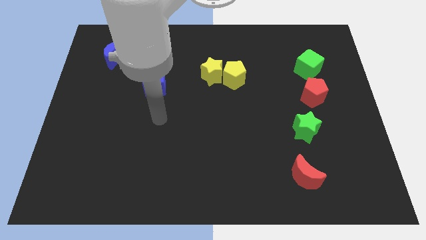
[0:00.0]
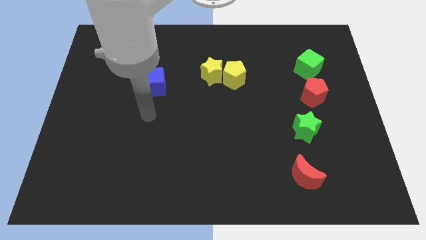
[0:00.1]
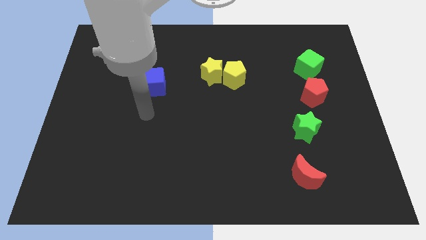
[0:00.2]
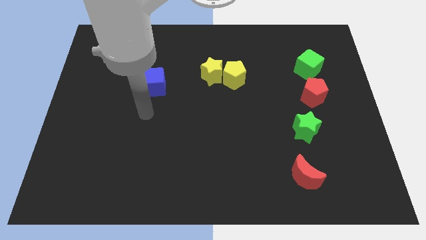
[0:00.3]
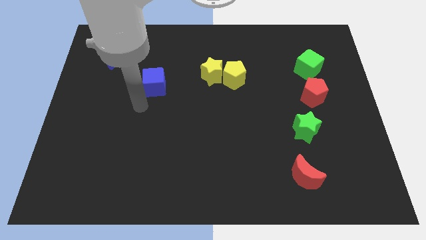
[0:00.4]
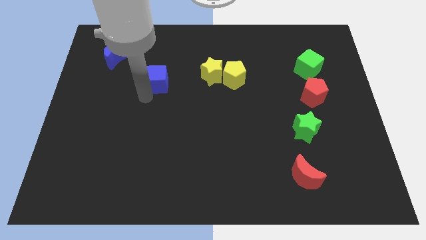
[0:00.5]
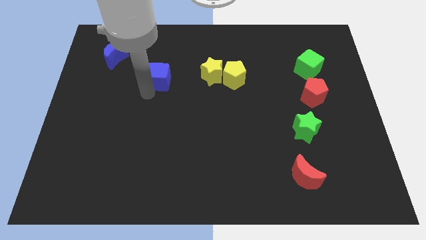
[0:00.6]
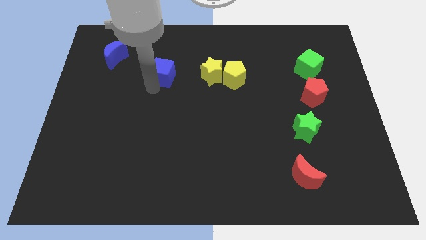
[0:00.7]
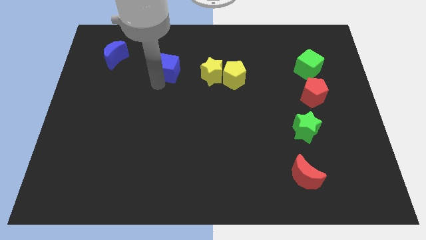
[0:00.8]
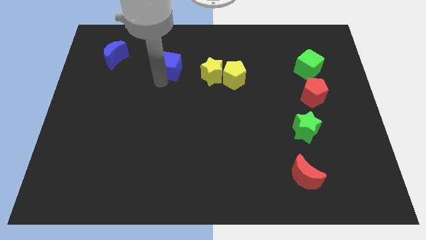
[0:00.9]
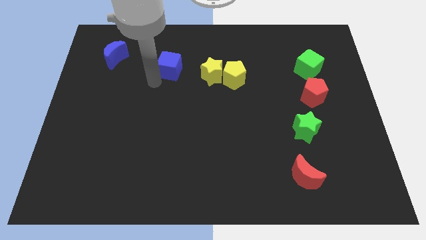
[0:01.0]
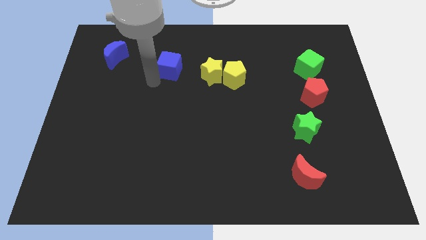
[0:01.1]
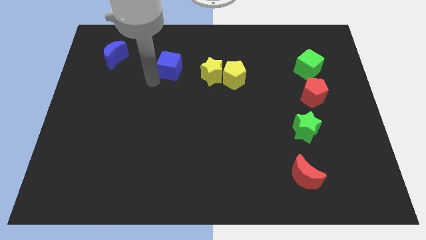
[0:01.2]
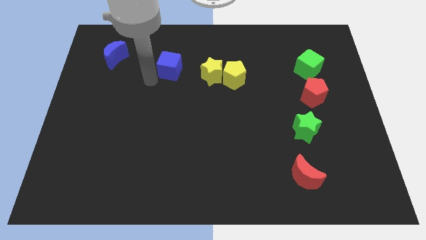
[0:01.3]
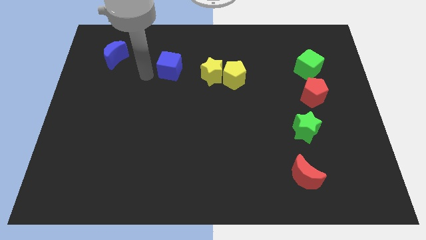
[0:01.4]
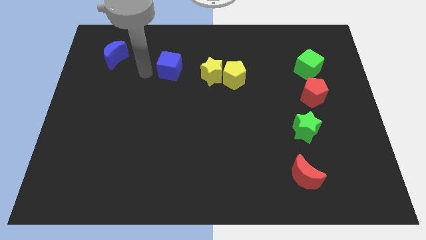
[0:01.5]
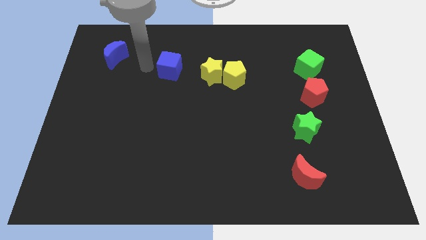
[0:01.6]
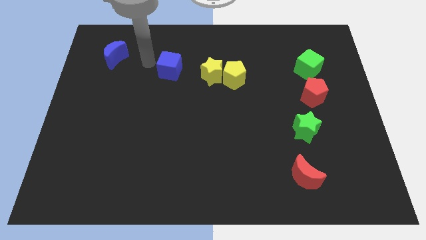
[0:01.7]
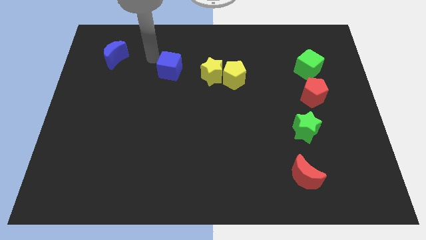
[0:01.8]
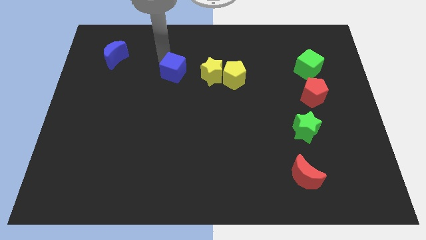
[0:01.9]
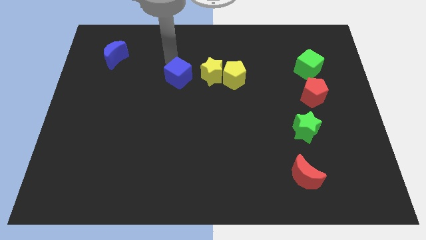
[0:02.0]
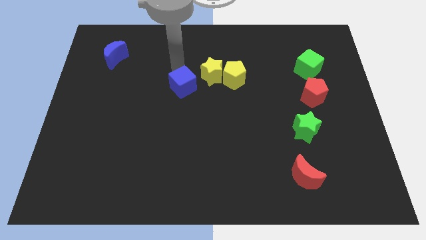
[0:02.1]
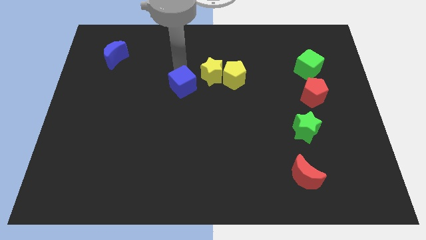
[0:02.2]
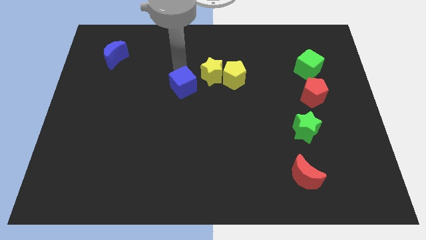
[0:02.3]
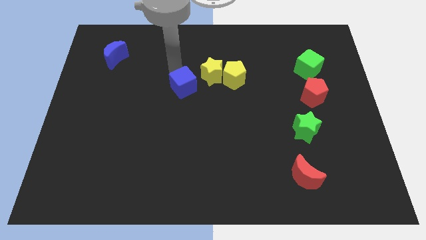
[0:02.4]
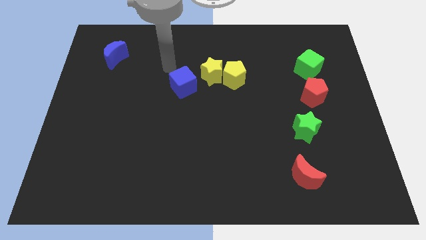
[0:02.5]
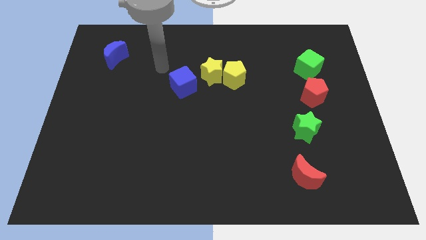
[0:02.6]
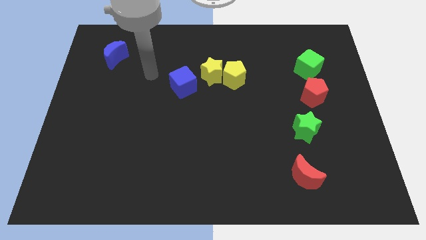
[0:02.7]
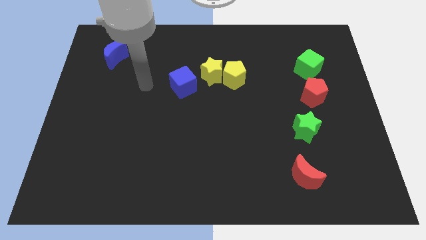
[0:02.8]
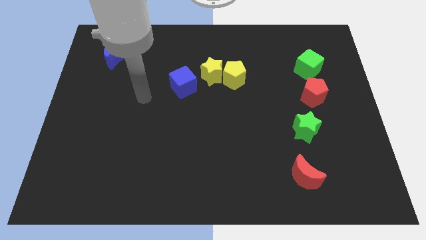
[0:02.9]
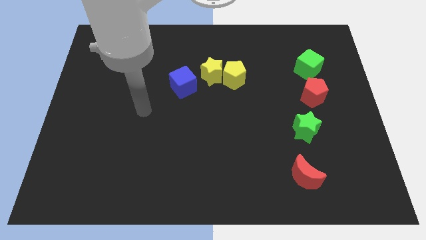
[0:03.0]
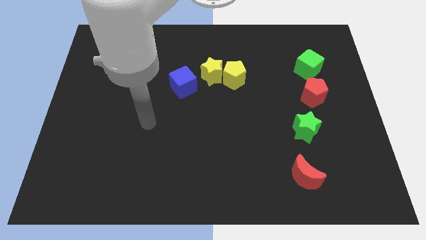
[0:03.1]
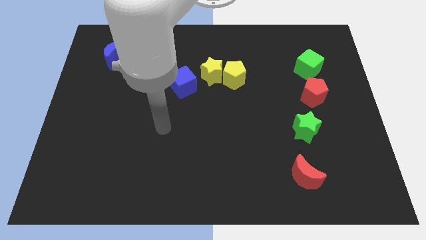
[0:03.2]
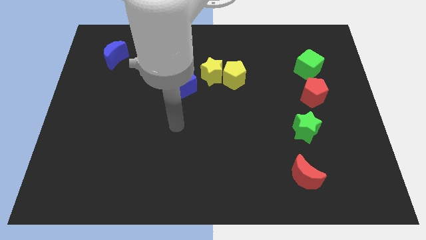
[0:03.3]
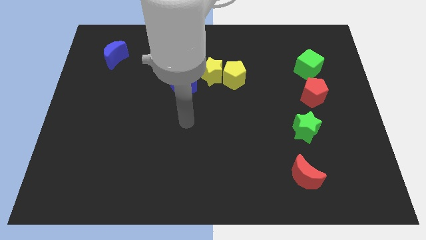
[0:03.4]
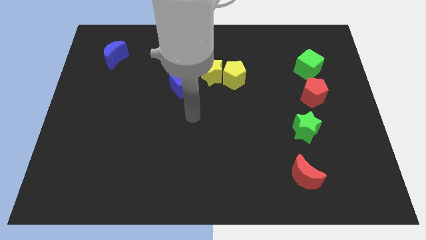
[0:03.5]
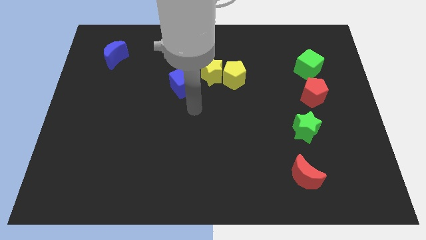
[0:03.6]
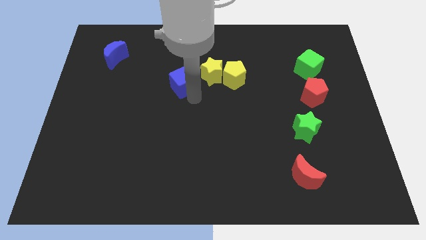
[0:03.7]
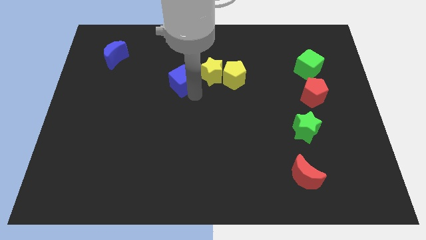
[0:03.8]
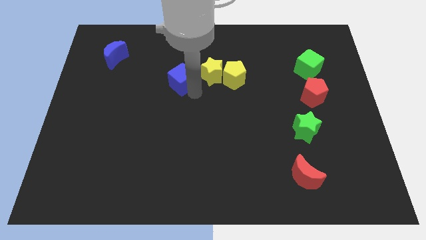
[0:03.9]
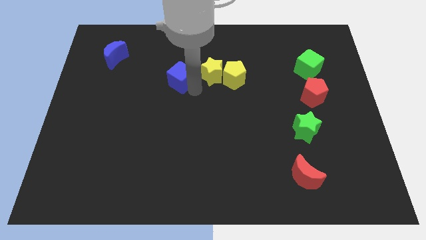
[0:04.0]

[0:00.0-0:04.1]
move blue cube left beside the yellow star

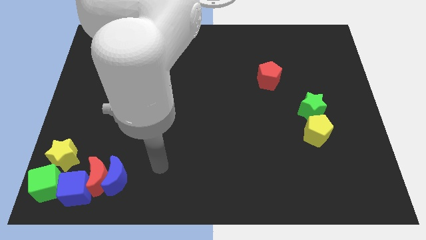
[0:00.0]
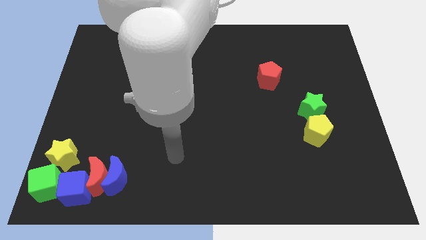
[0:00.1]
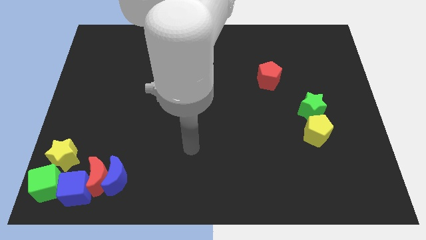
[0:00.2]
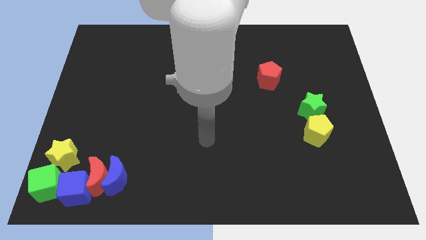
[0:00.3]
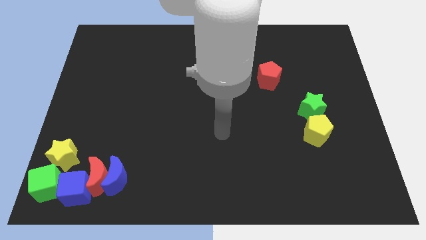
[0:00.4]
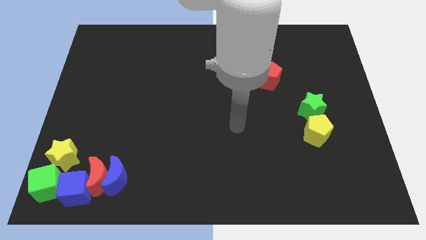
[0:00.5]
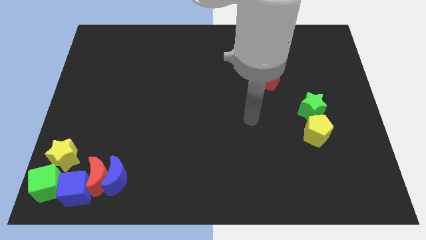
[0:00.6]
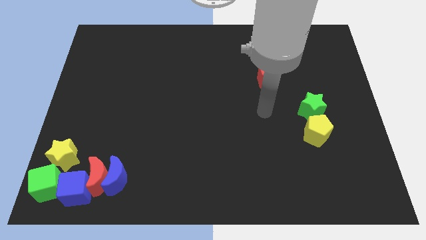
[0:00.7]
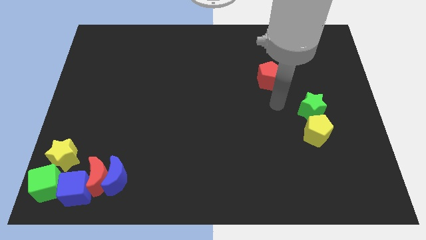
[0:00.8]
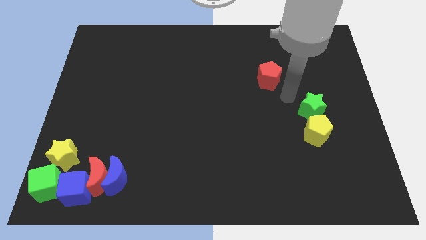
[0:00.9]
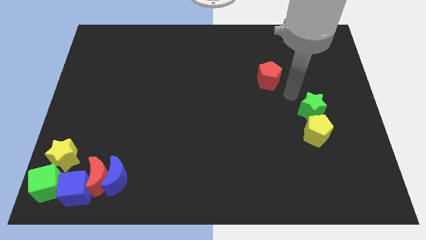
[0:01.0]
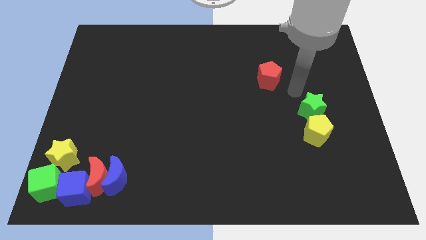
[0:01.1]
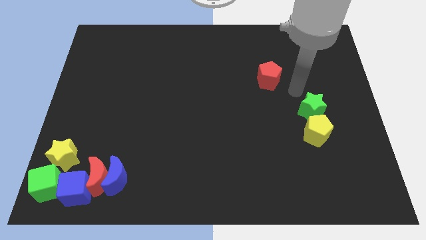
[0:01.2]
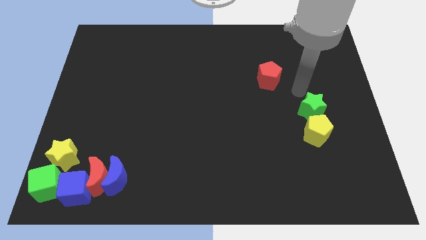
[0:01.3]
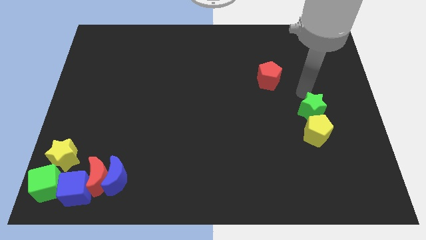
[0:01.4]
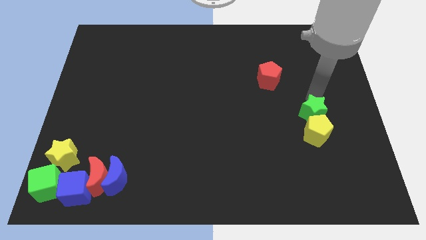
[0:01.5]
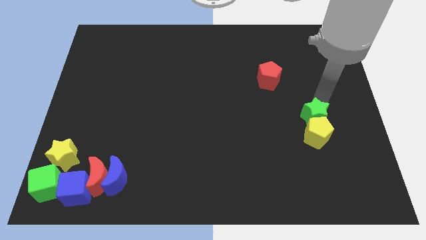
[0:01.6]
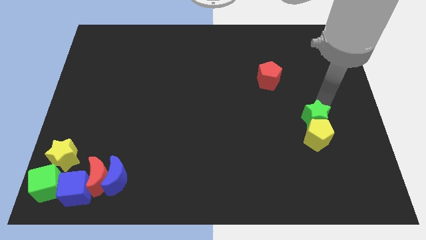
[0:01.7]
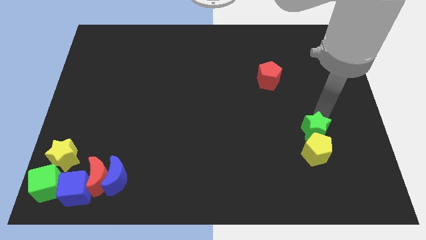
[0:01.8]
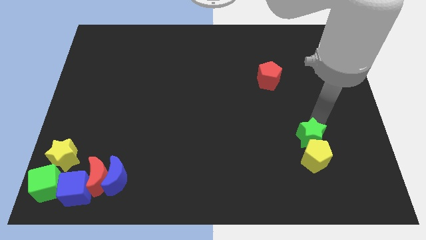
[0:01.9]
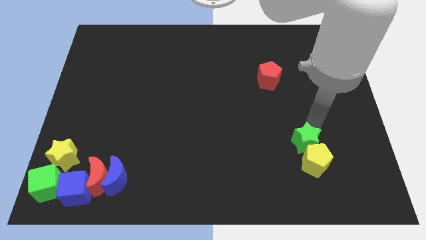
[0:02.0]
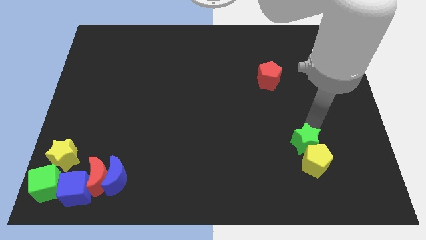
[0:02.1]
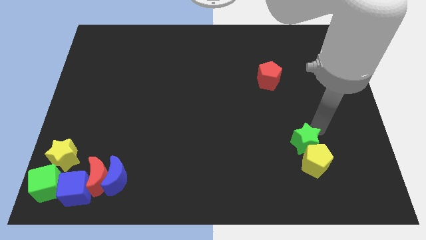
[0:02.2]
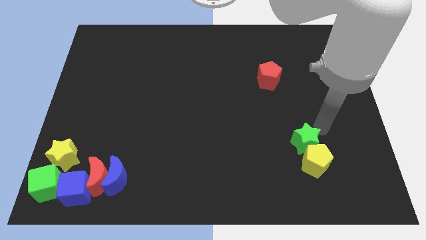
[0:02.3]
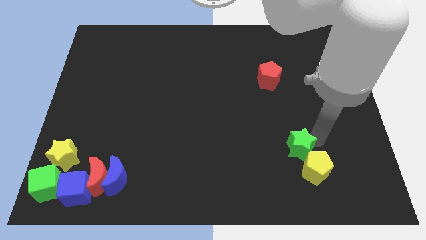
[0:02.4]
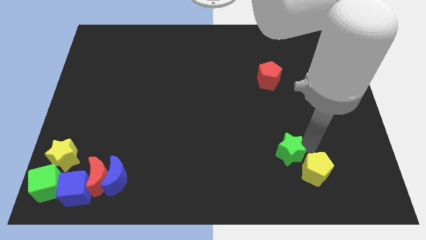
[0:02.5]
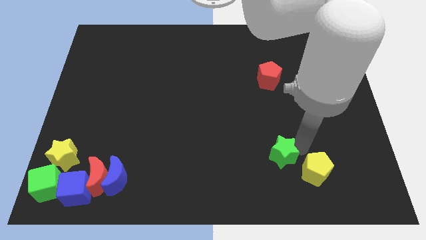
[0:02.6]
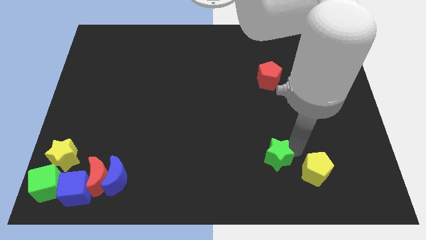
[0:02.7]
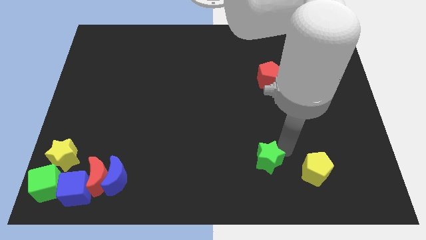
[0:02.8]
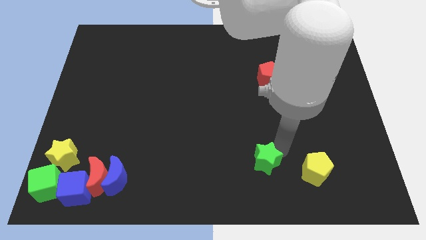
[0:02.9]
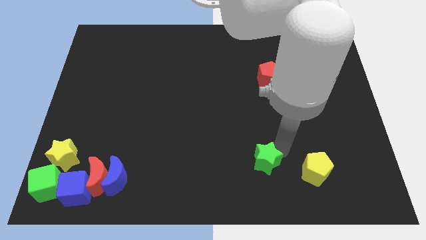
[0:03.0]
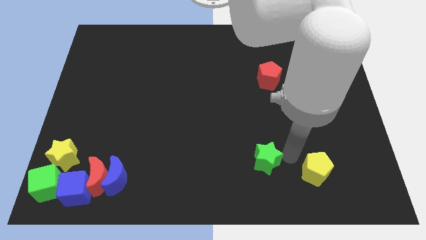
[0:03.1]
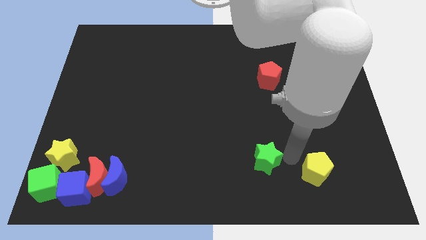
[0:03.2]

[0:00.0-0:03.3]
separate the green star and yellow pentagon

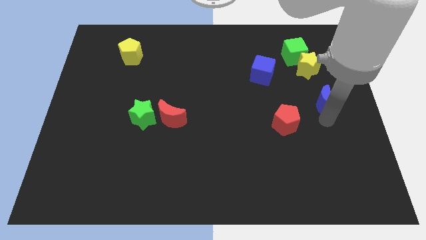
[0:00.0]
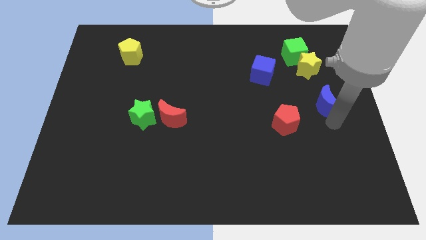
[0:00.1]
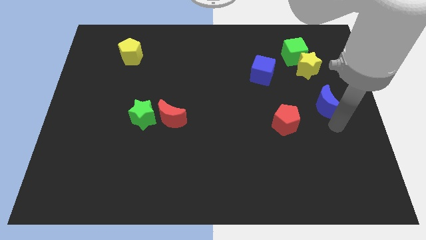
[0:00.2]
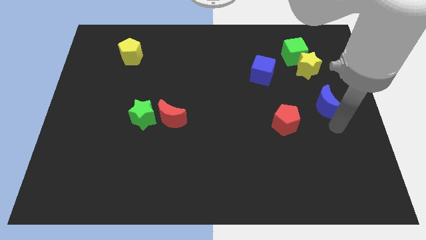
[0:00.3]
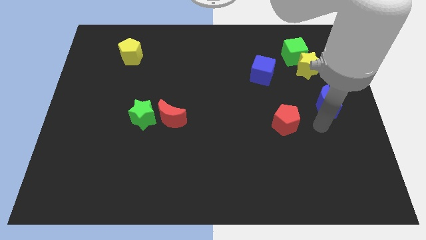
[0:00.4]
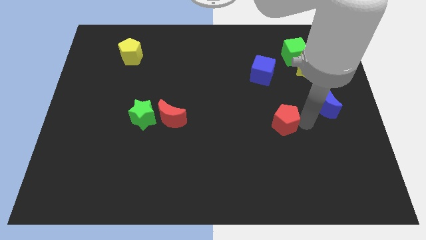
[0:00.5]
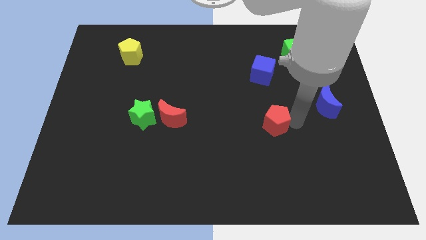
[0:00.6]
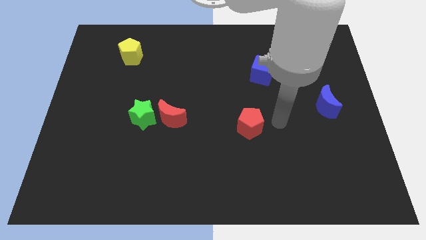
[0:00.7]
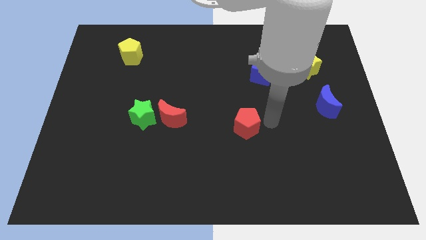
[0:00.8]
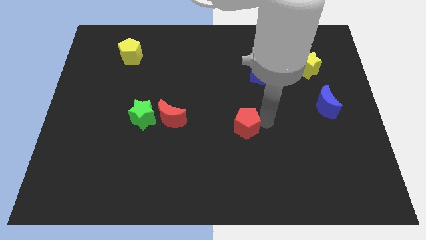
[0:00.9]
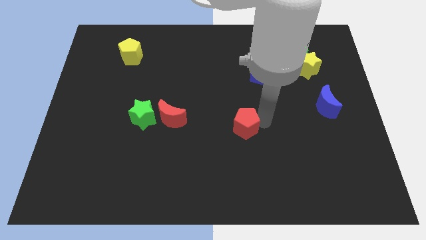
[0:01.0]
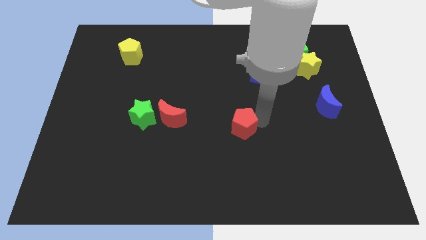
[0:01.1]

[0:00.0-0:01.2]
push the red pentagon closer to the red moon

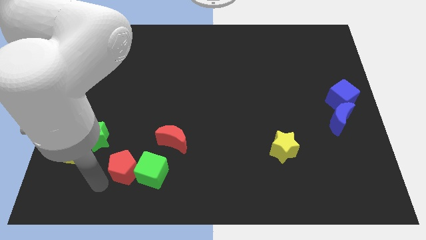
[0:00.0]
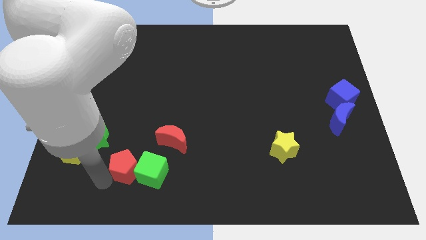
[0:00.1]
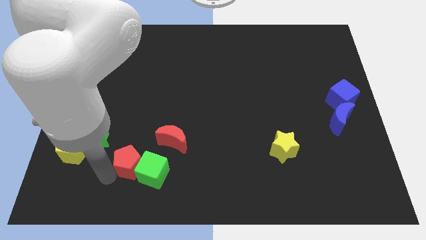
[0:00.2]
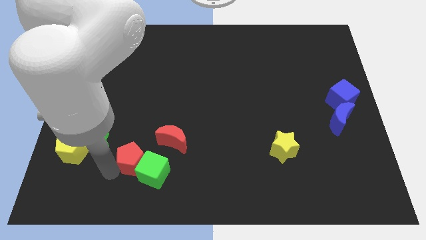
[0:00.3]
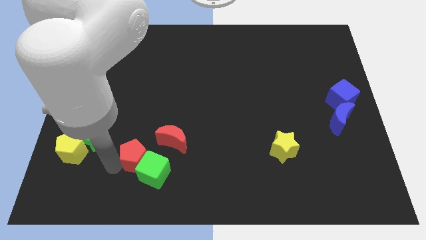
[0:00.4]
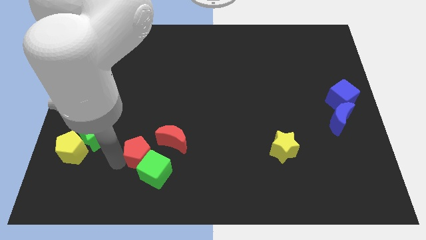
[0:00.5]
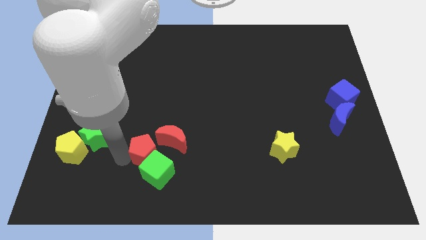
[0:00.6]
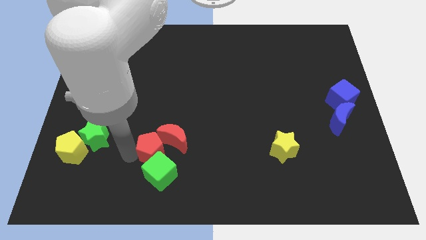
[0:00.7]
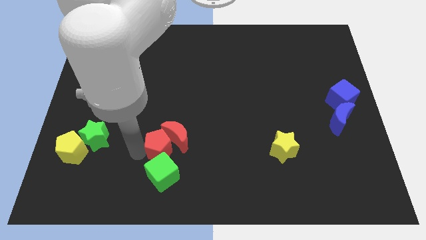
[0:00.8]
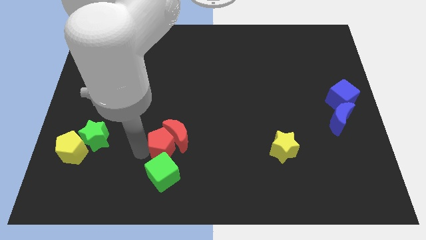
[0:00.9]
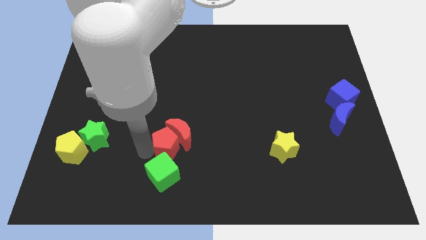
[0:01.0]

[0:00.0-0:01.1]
move red pentagon in to red crescent
